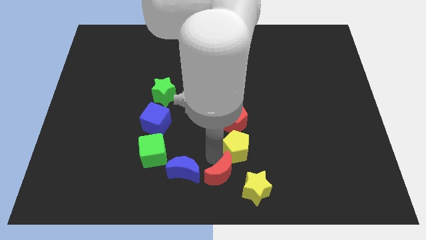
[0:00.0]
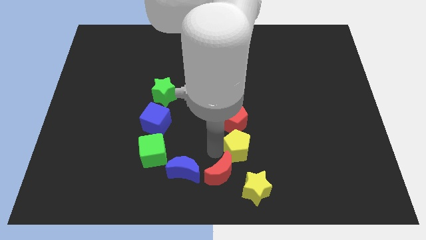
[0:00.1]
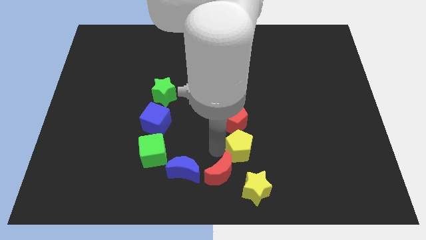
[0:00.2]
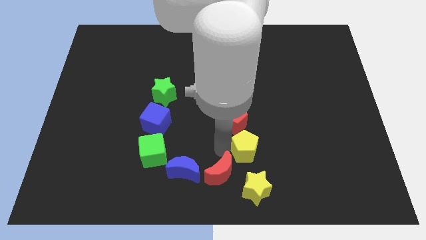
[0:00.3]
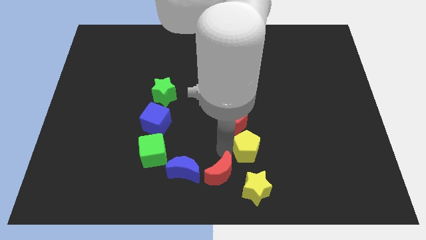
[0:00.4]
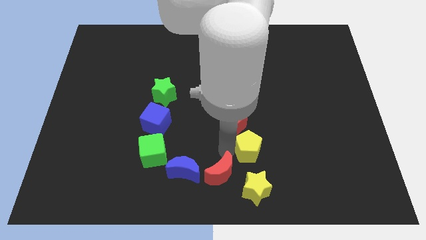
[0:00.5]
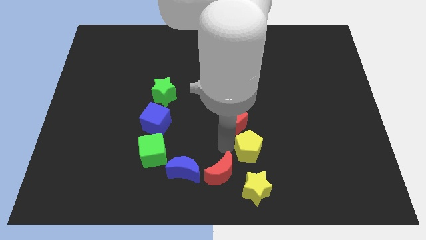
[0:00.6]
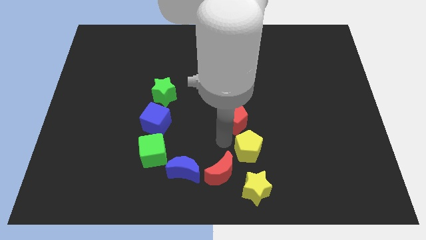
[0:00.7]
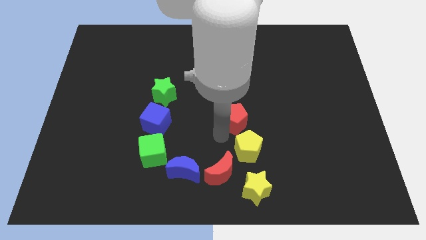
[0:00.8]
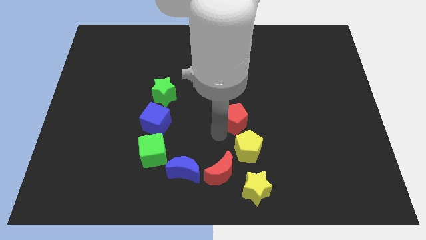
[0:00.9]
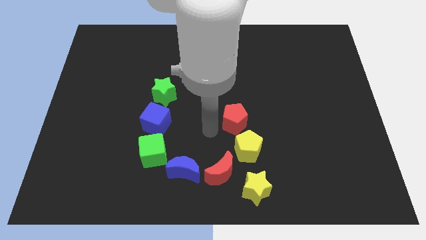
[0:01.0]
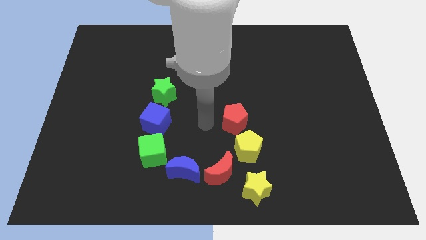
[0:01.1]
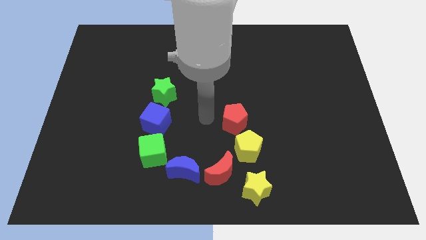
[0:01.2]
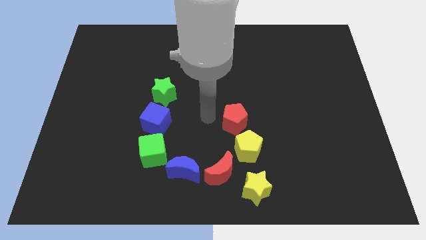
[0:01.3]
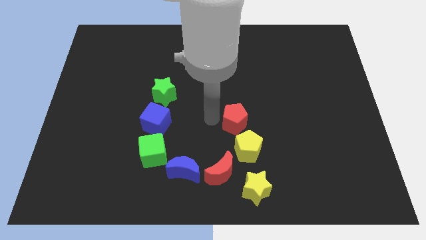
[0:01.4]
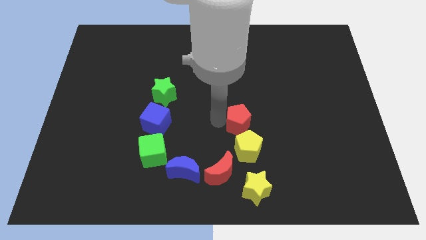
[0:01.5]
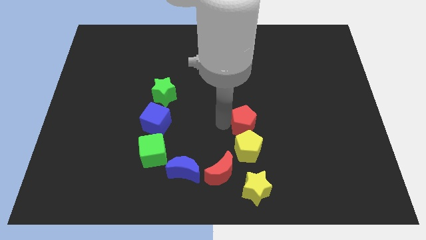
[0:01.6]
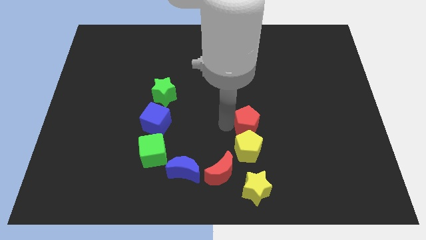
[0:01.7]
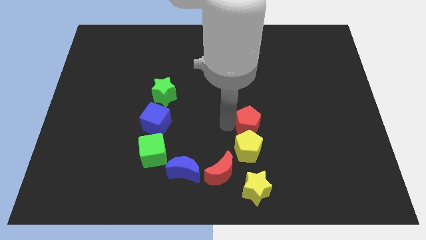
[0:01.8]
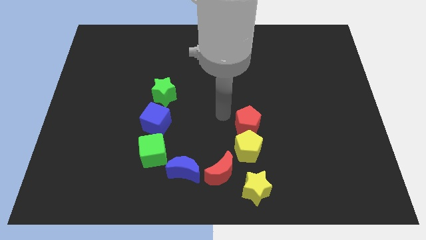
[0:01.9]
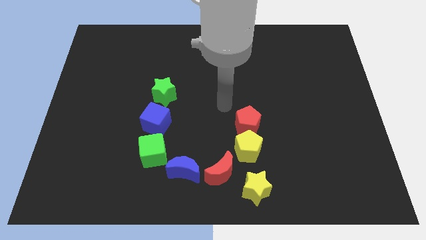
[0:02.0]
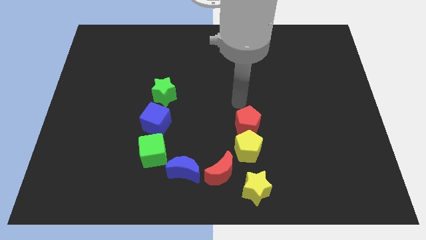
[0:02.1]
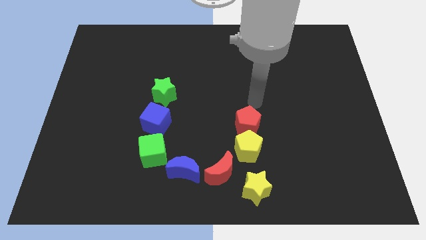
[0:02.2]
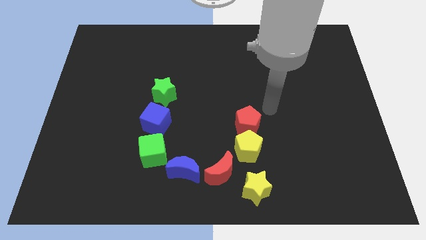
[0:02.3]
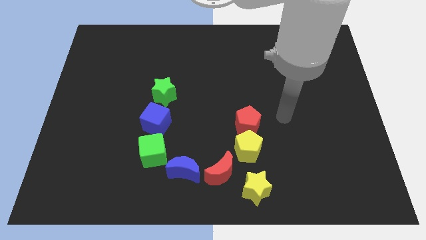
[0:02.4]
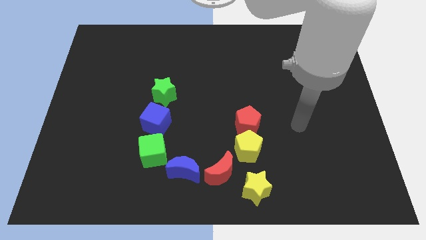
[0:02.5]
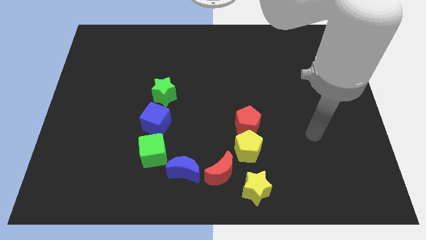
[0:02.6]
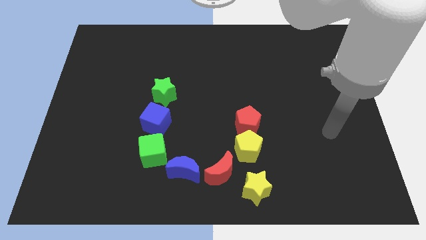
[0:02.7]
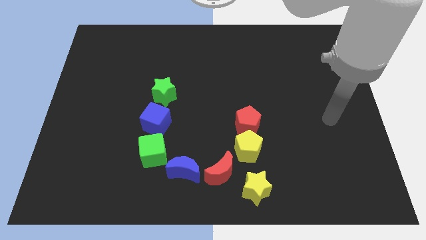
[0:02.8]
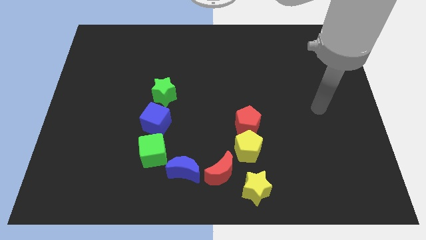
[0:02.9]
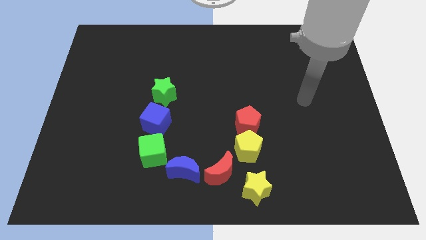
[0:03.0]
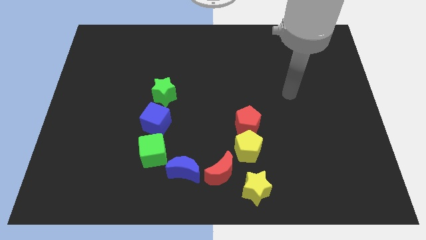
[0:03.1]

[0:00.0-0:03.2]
adjust the yellow and red pentagons in a vertical line above the yellow star

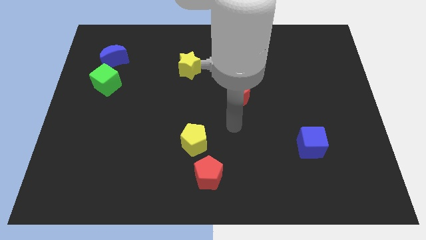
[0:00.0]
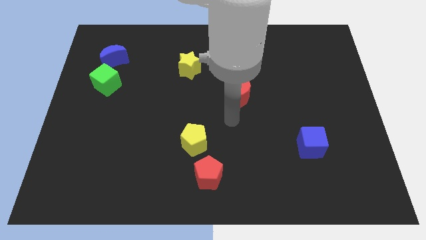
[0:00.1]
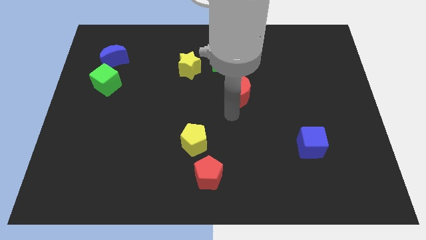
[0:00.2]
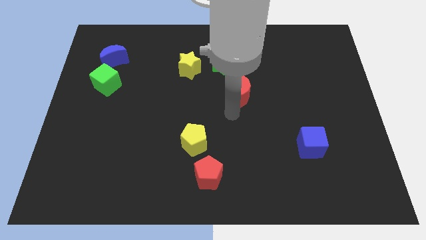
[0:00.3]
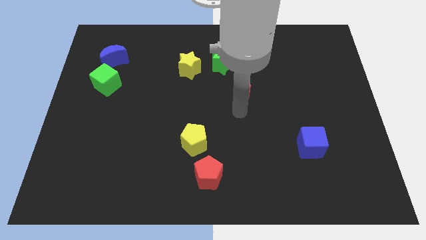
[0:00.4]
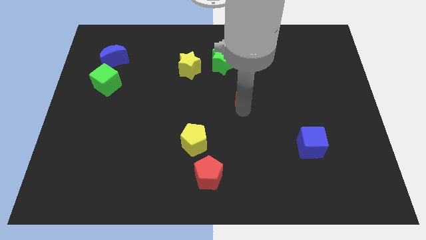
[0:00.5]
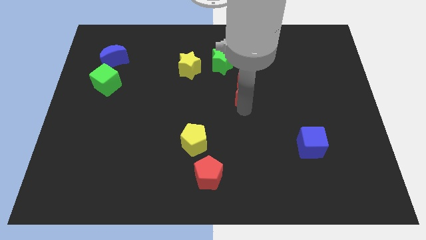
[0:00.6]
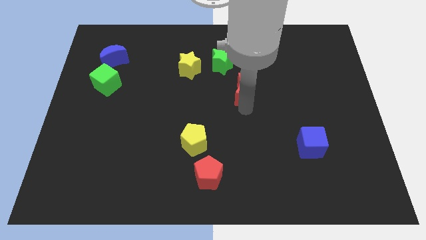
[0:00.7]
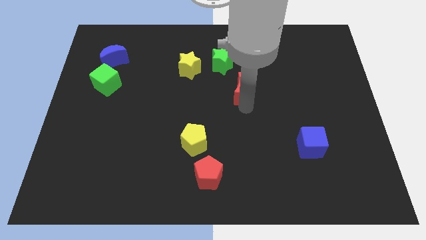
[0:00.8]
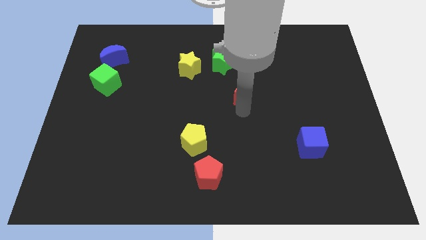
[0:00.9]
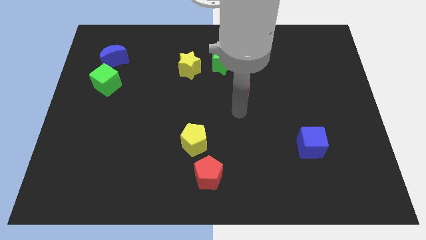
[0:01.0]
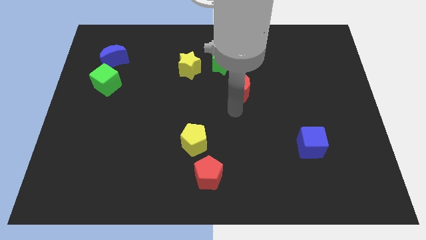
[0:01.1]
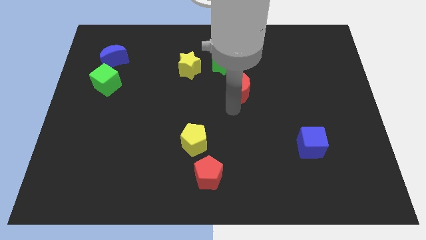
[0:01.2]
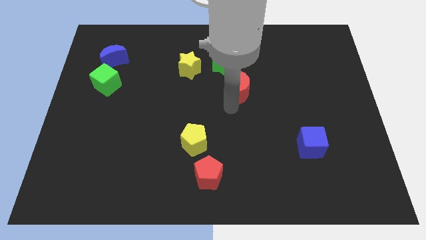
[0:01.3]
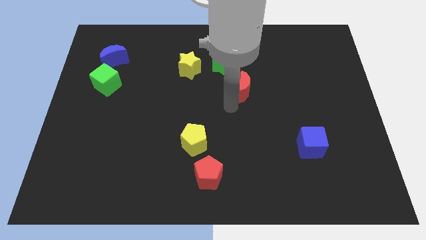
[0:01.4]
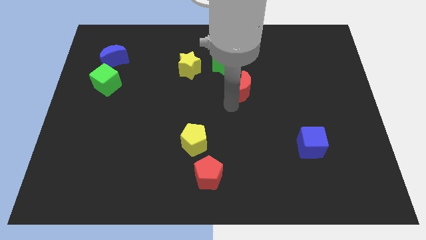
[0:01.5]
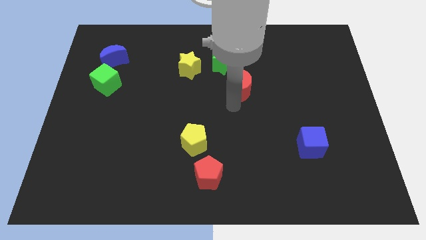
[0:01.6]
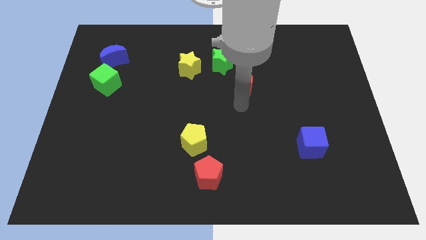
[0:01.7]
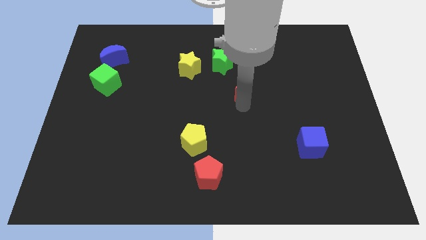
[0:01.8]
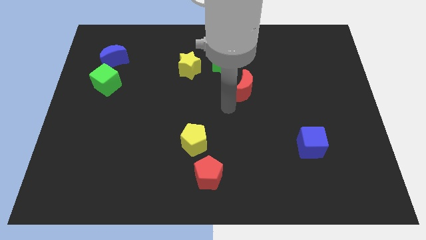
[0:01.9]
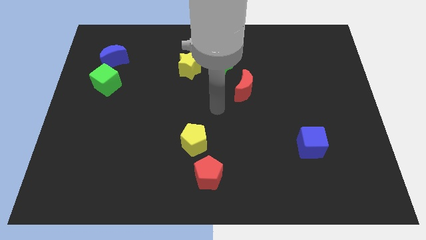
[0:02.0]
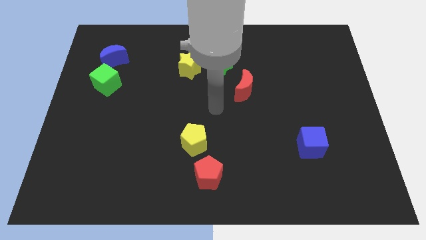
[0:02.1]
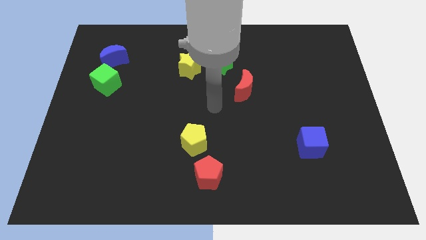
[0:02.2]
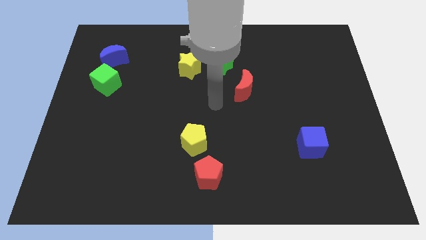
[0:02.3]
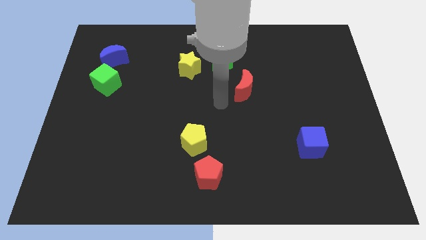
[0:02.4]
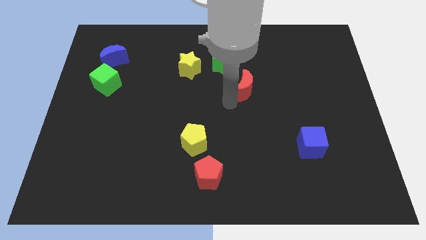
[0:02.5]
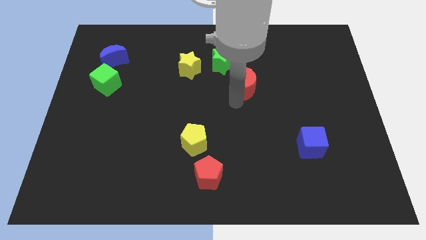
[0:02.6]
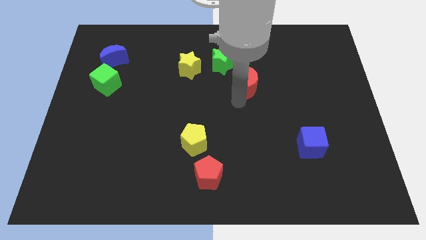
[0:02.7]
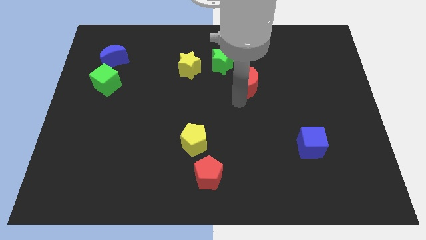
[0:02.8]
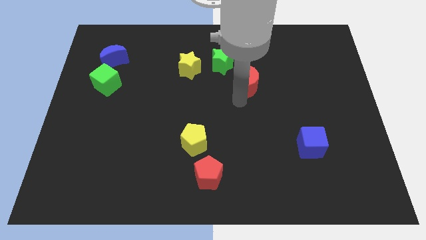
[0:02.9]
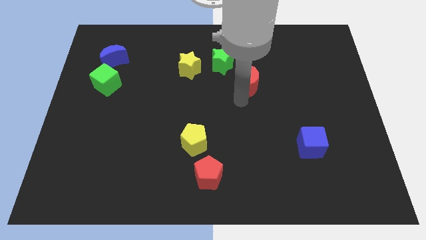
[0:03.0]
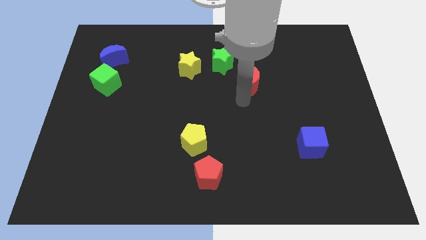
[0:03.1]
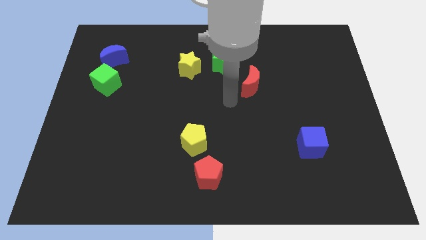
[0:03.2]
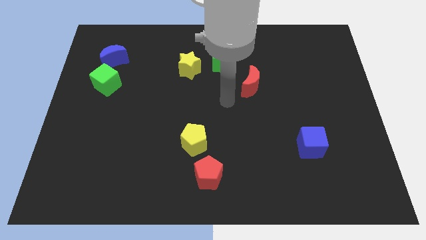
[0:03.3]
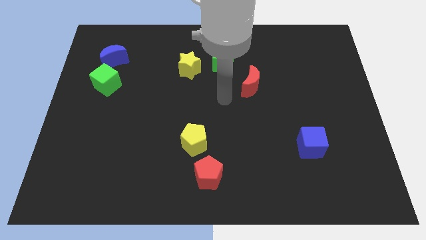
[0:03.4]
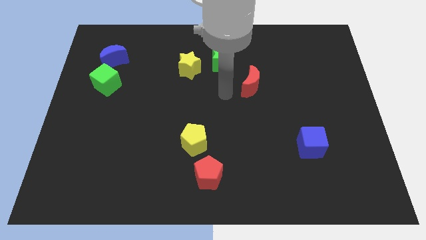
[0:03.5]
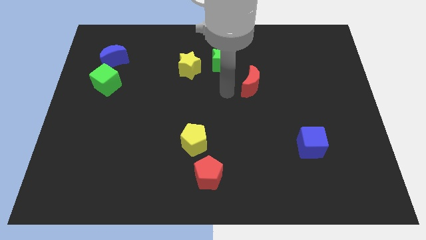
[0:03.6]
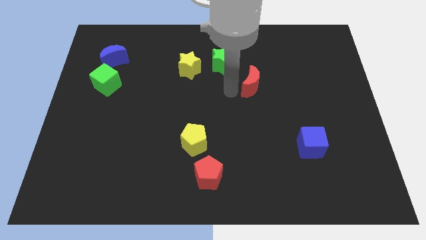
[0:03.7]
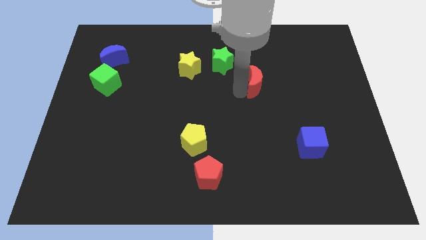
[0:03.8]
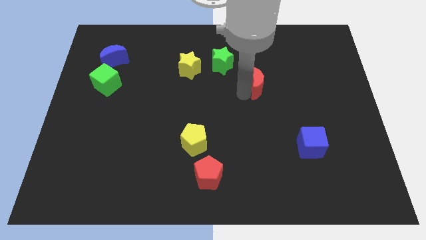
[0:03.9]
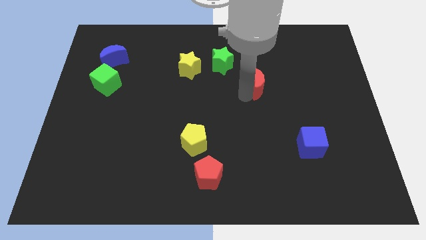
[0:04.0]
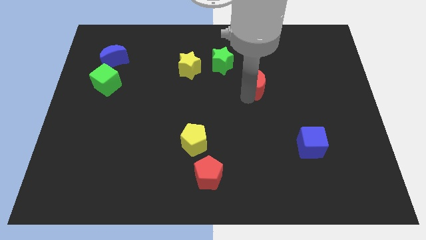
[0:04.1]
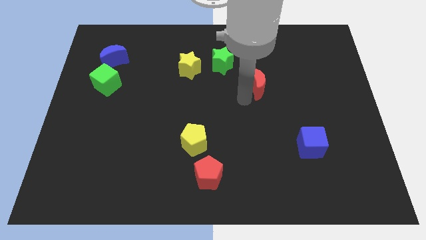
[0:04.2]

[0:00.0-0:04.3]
push the red crescent to the center of the board

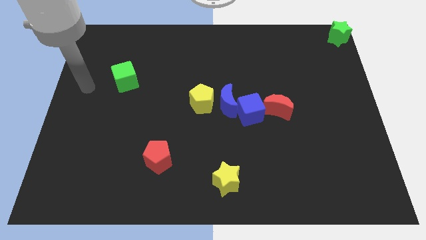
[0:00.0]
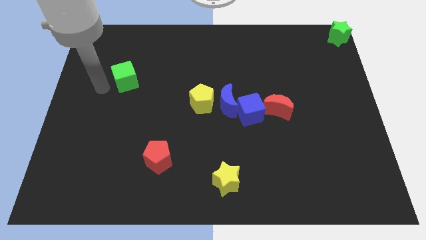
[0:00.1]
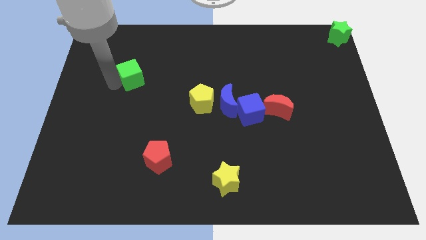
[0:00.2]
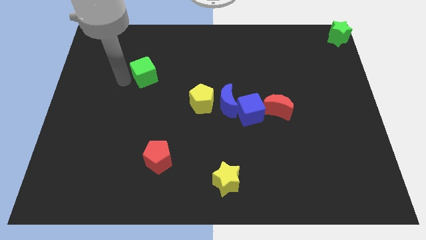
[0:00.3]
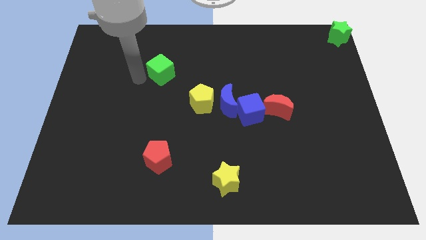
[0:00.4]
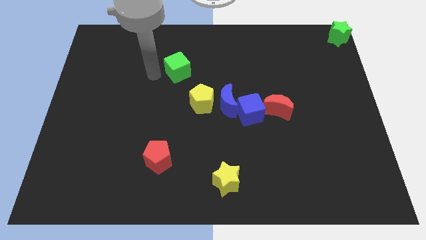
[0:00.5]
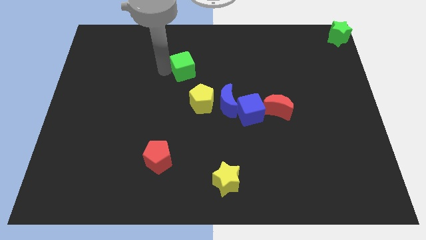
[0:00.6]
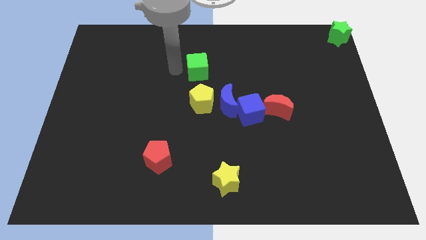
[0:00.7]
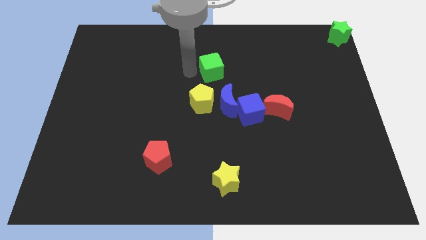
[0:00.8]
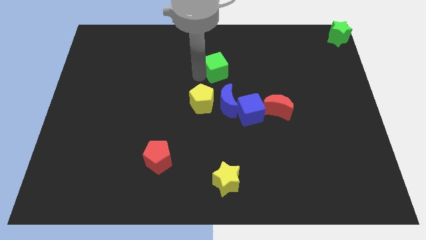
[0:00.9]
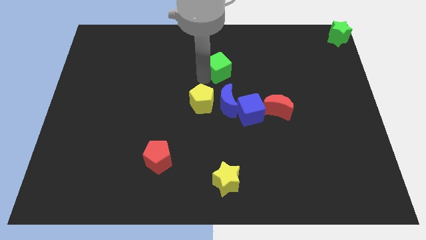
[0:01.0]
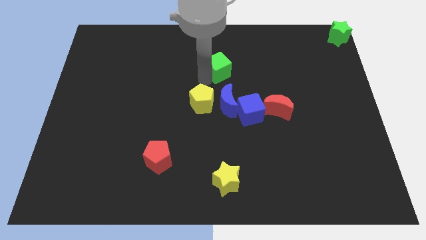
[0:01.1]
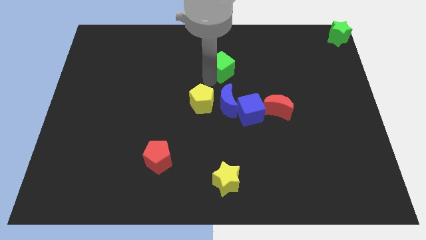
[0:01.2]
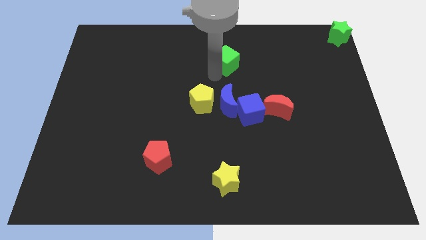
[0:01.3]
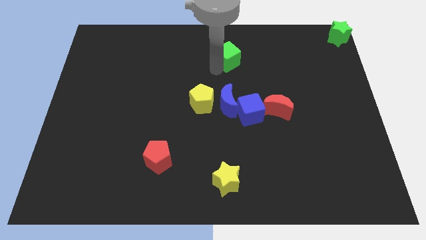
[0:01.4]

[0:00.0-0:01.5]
push the green cube to the top side of the blue moon
